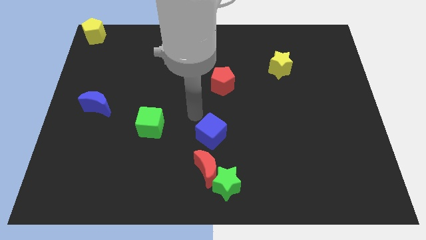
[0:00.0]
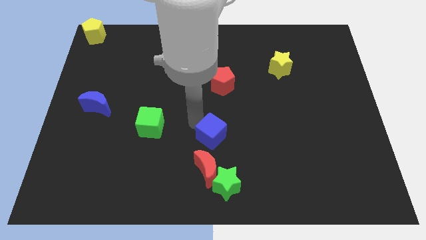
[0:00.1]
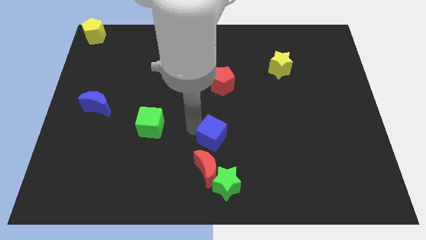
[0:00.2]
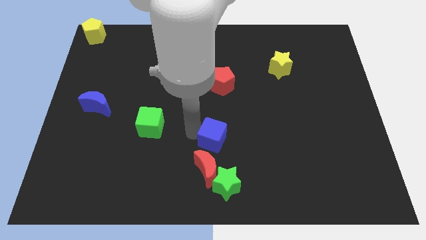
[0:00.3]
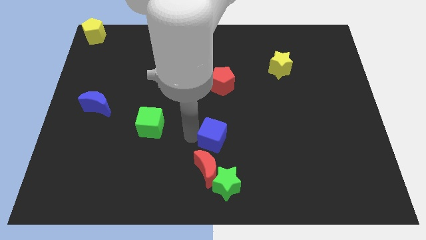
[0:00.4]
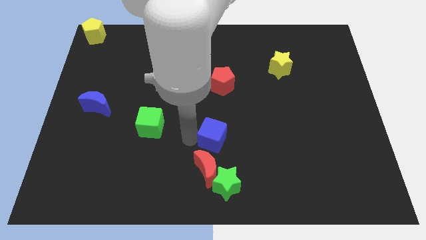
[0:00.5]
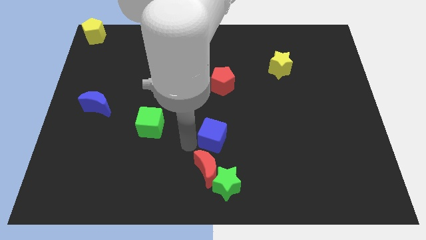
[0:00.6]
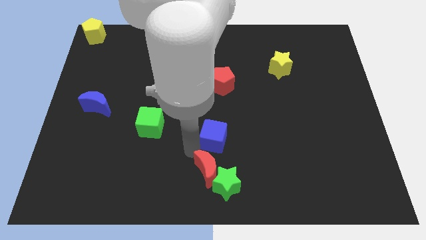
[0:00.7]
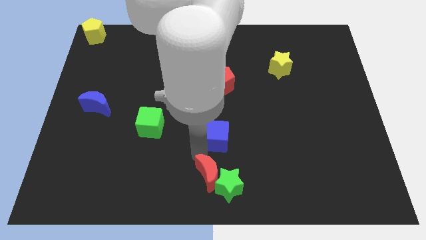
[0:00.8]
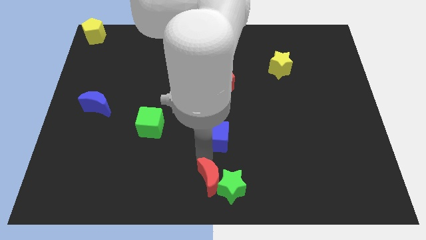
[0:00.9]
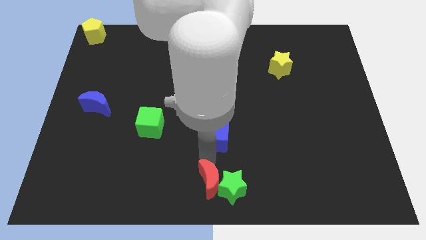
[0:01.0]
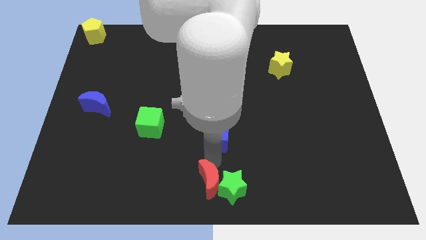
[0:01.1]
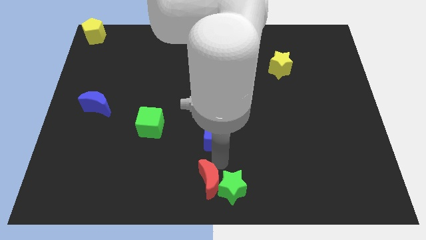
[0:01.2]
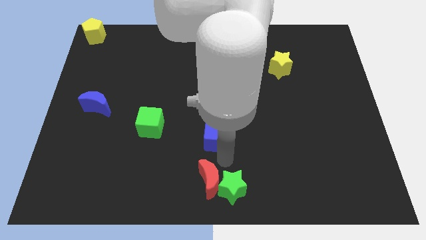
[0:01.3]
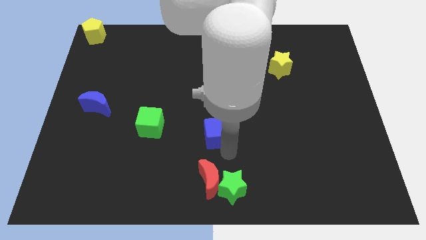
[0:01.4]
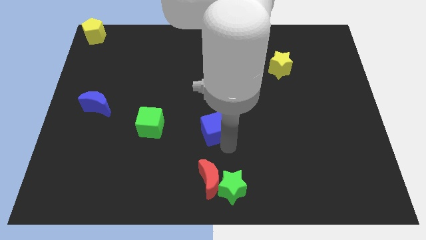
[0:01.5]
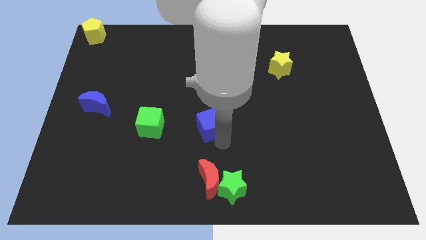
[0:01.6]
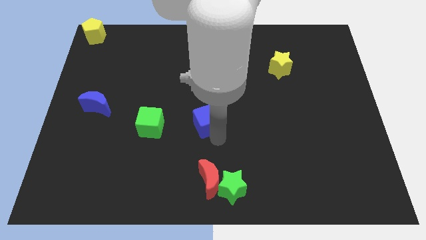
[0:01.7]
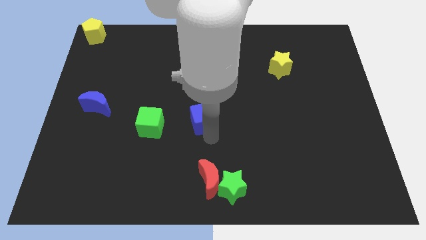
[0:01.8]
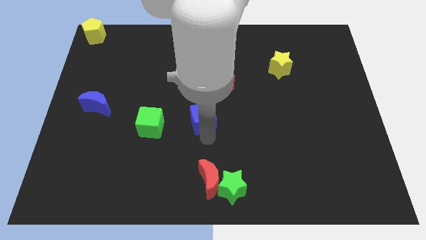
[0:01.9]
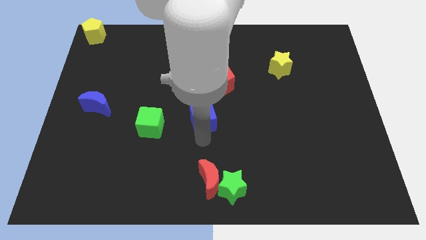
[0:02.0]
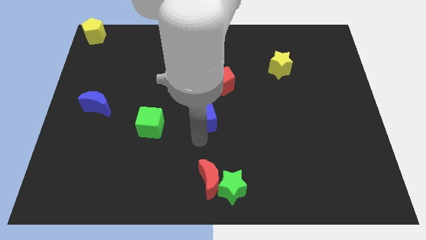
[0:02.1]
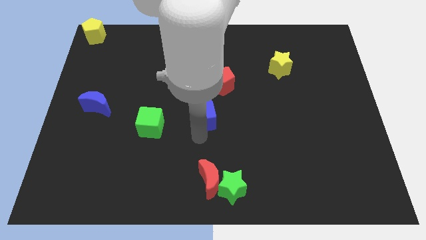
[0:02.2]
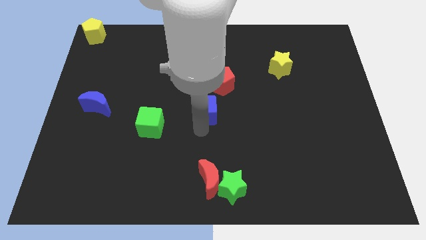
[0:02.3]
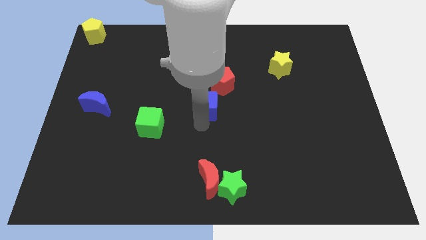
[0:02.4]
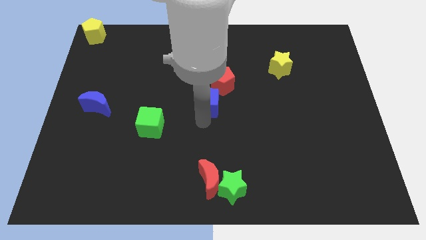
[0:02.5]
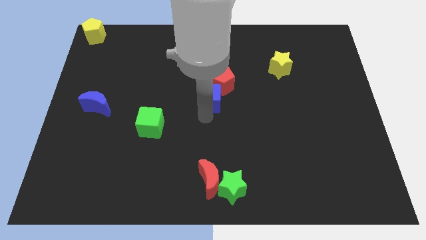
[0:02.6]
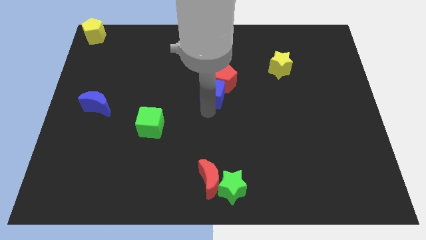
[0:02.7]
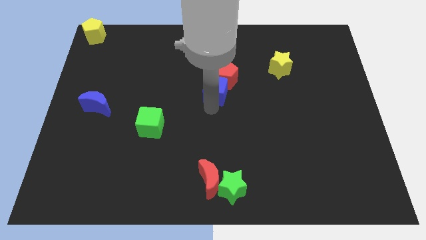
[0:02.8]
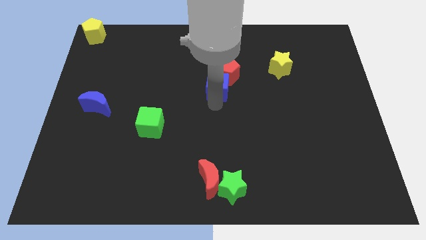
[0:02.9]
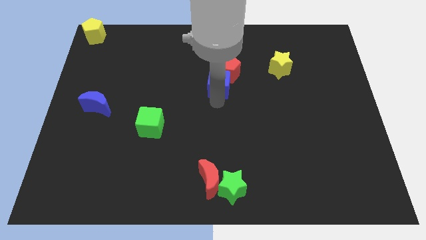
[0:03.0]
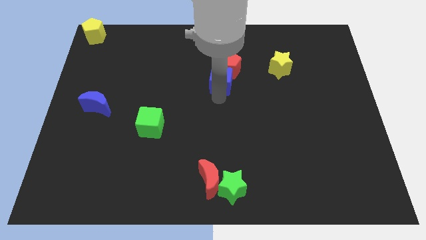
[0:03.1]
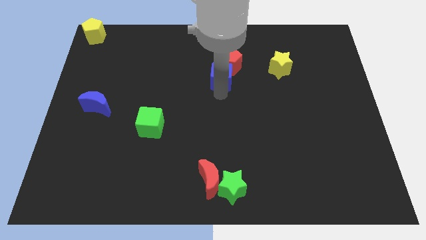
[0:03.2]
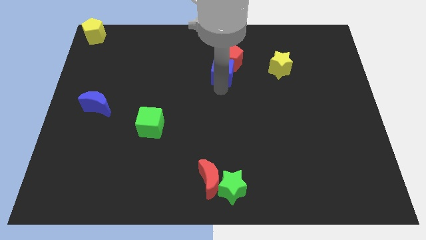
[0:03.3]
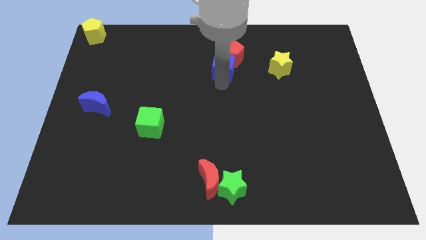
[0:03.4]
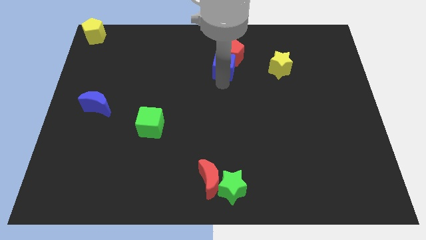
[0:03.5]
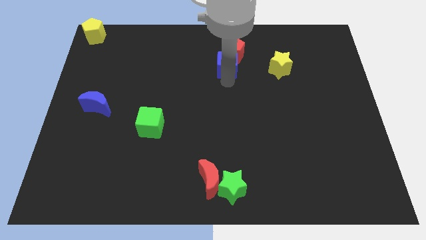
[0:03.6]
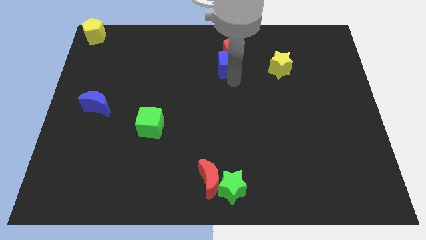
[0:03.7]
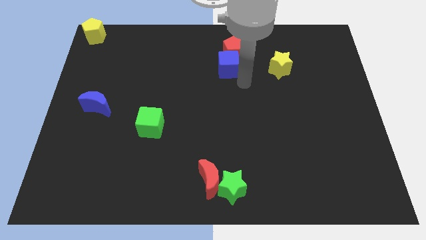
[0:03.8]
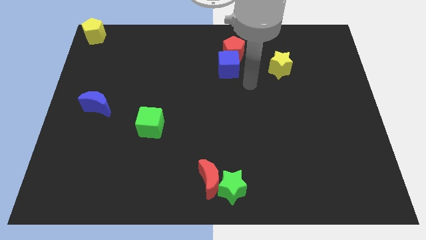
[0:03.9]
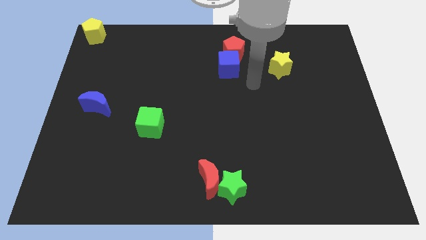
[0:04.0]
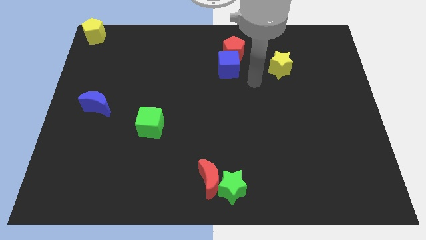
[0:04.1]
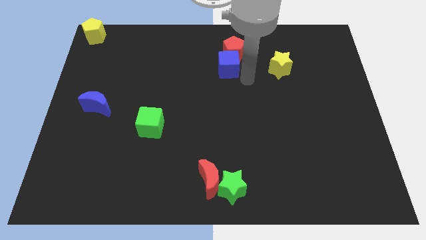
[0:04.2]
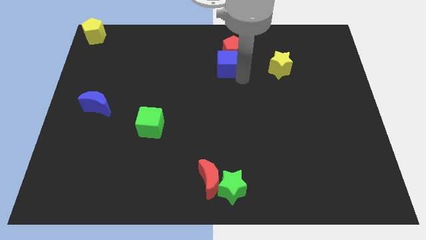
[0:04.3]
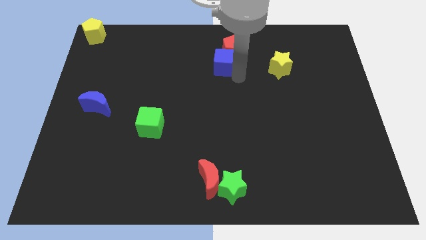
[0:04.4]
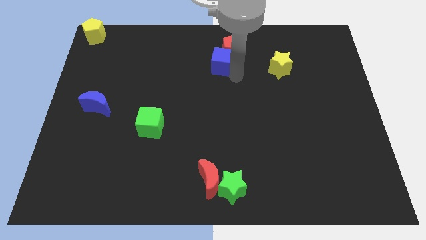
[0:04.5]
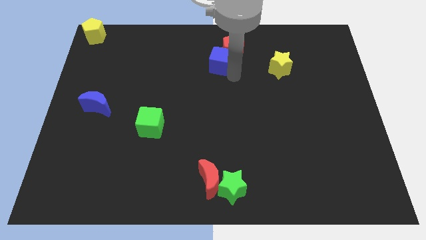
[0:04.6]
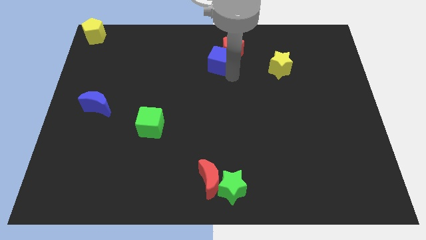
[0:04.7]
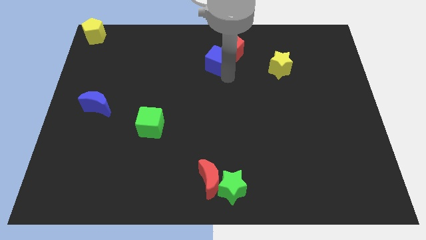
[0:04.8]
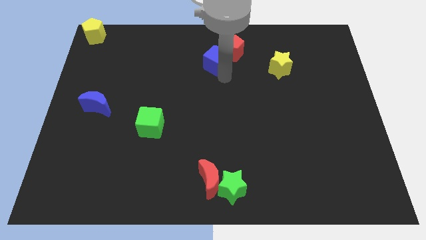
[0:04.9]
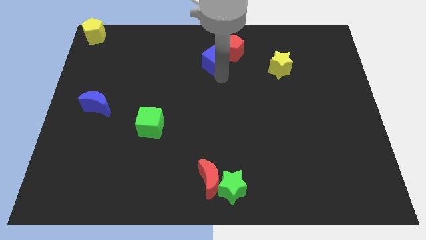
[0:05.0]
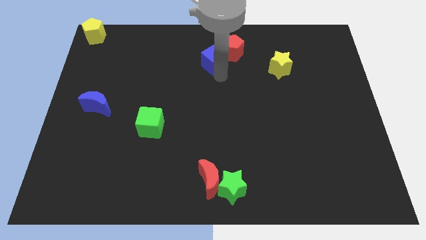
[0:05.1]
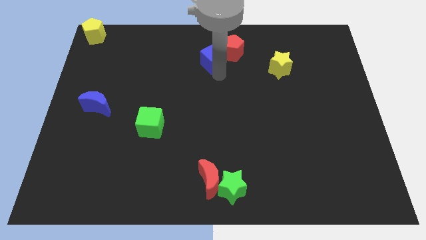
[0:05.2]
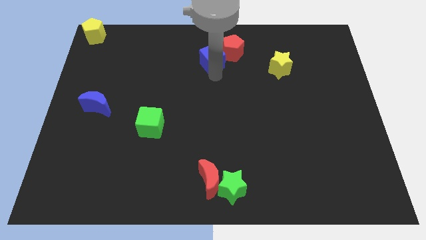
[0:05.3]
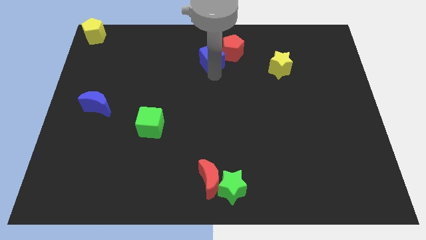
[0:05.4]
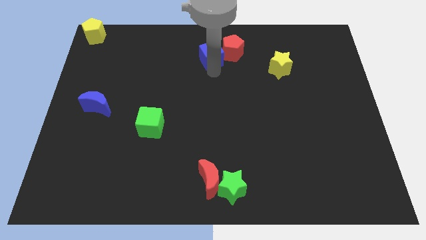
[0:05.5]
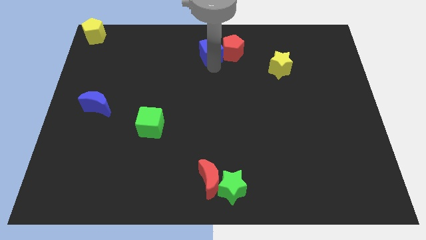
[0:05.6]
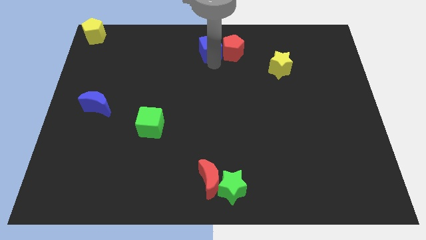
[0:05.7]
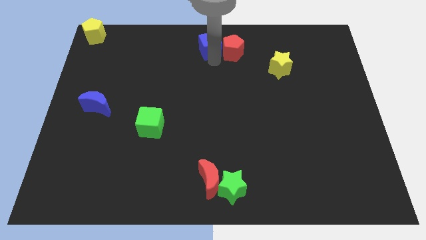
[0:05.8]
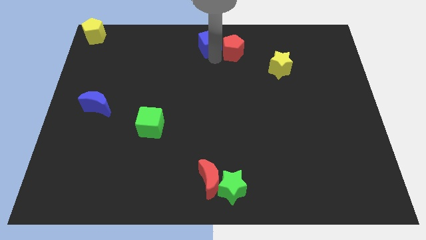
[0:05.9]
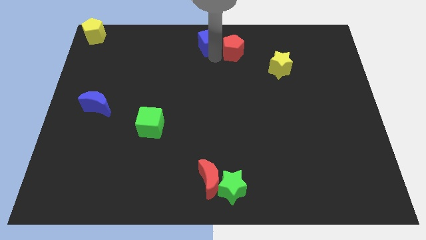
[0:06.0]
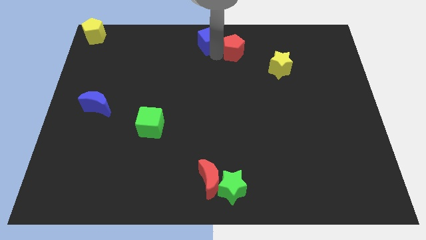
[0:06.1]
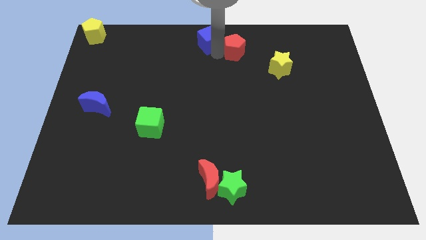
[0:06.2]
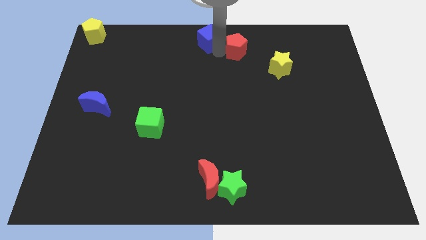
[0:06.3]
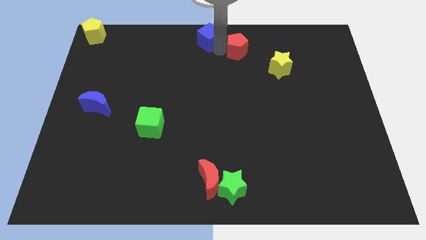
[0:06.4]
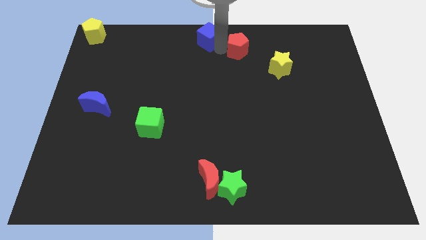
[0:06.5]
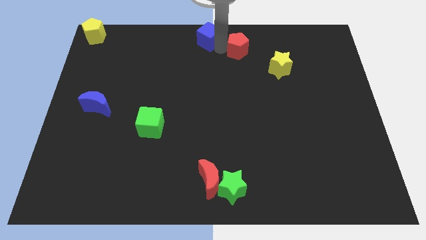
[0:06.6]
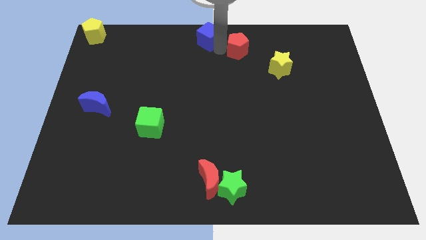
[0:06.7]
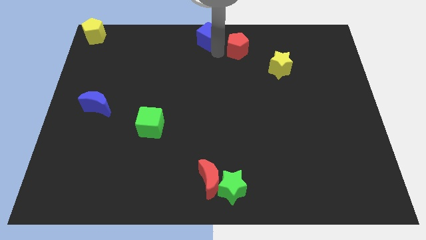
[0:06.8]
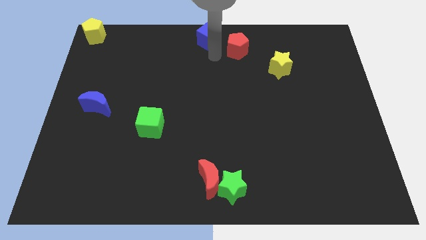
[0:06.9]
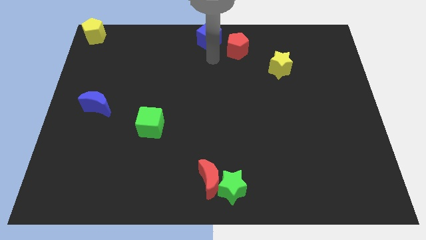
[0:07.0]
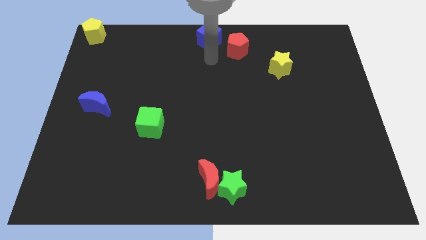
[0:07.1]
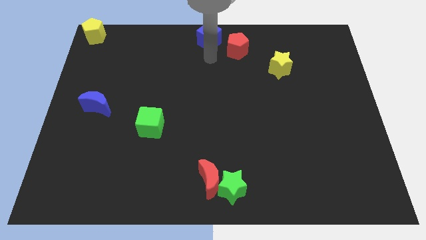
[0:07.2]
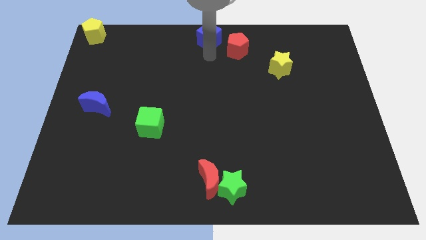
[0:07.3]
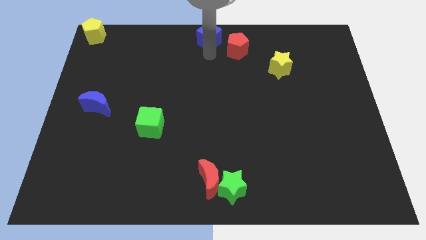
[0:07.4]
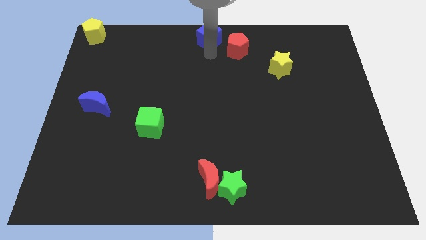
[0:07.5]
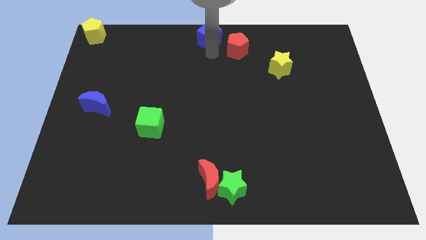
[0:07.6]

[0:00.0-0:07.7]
place the blue cube at the top center of the board

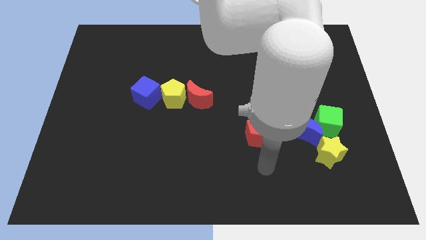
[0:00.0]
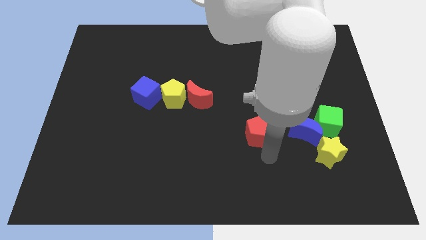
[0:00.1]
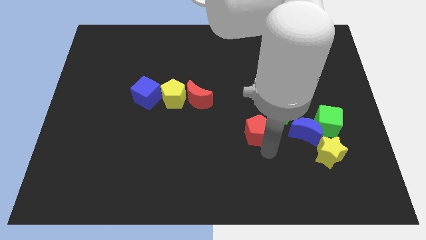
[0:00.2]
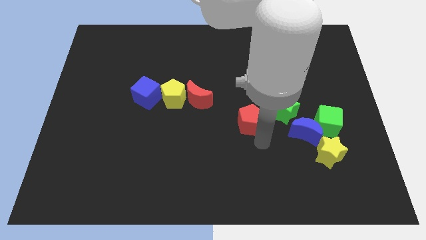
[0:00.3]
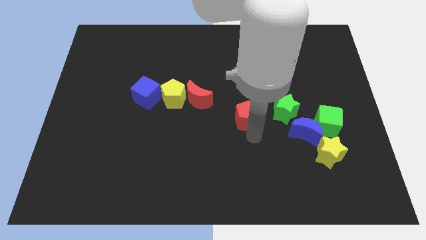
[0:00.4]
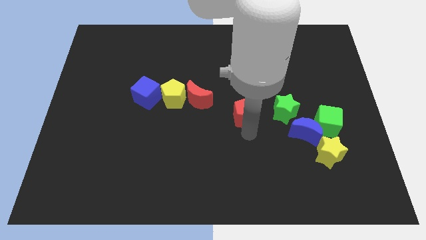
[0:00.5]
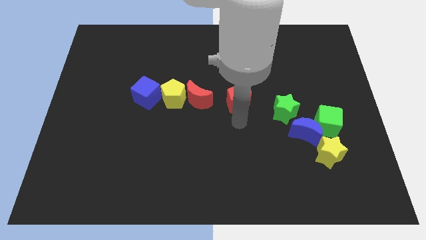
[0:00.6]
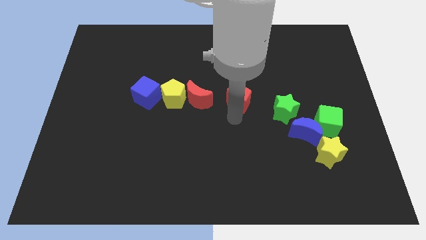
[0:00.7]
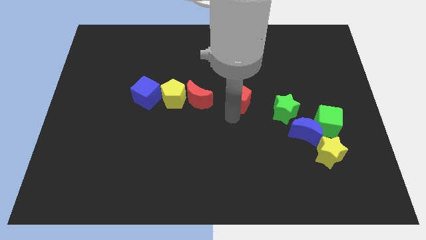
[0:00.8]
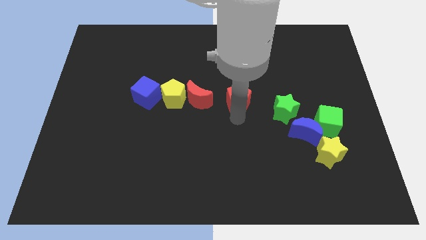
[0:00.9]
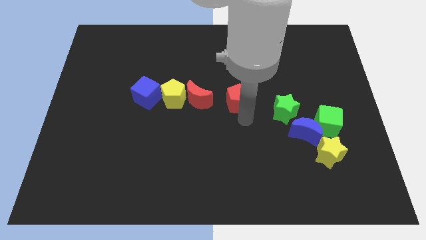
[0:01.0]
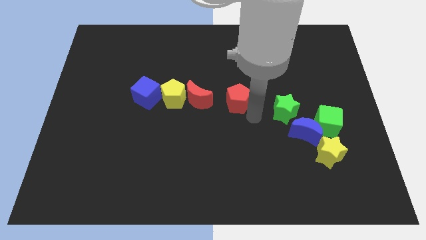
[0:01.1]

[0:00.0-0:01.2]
push the red pentagon towards top
